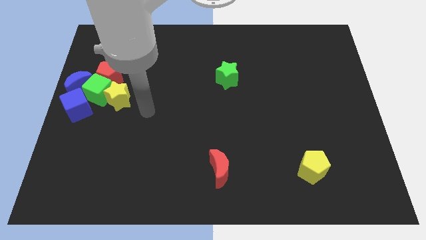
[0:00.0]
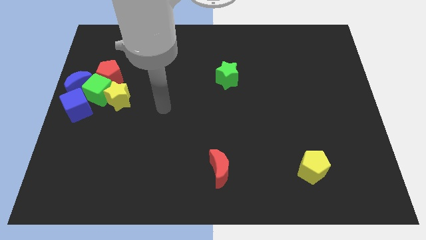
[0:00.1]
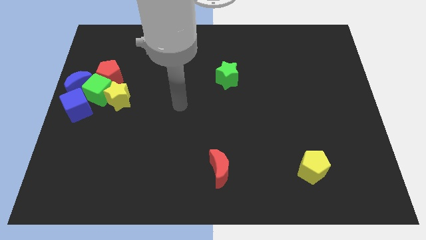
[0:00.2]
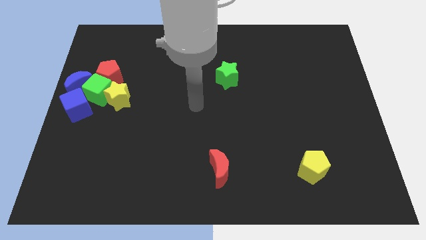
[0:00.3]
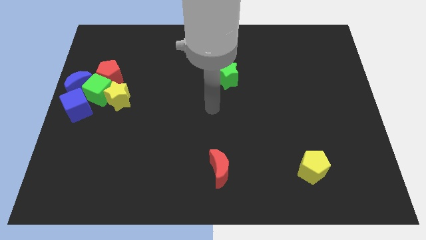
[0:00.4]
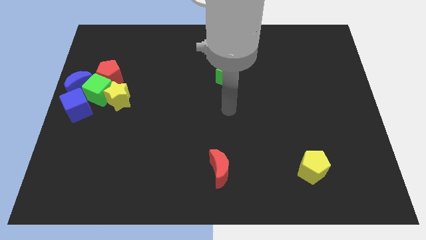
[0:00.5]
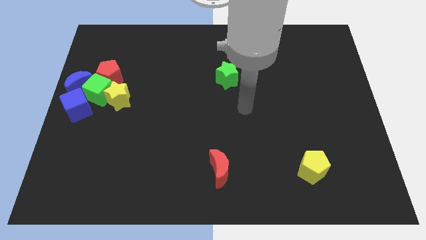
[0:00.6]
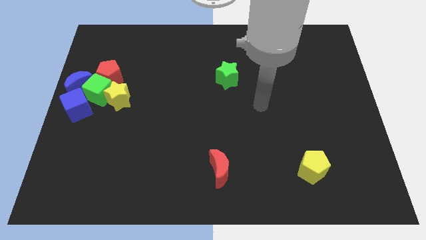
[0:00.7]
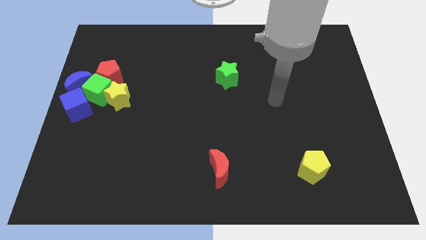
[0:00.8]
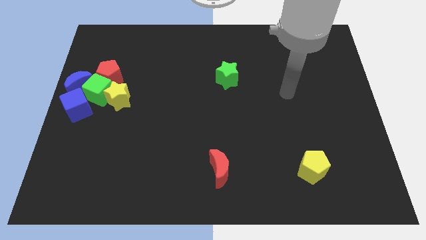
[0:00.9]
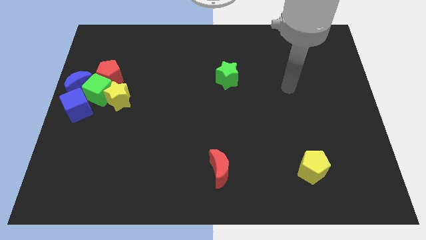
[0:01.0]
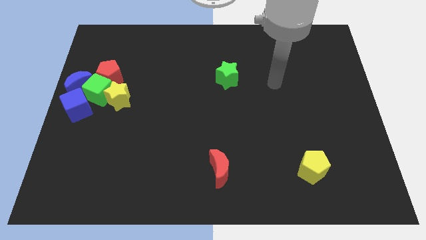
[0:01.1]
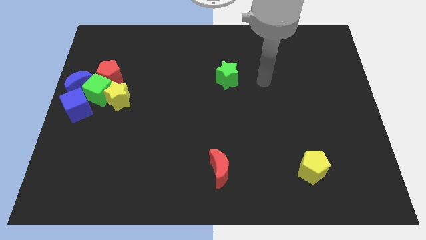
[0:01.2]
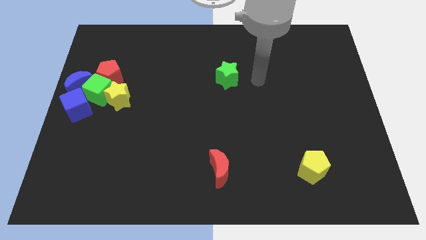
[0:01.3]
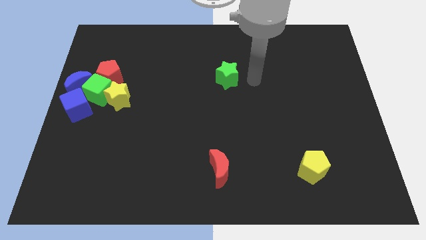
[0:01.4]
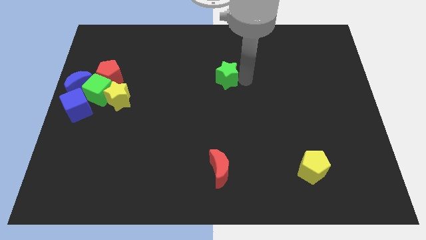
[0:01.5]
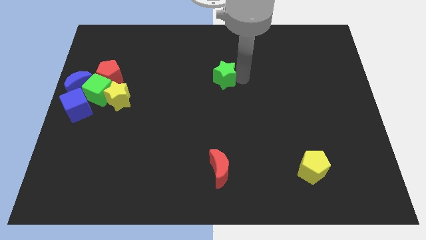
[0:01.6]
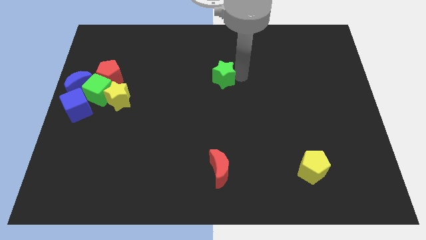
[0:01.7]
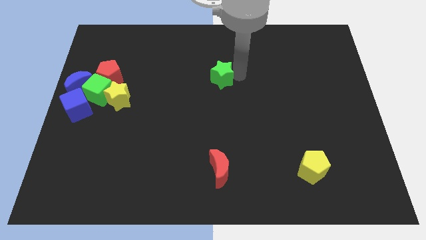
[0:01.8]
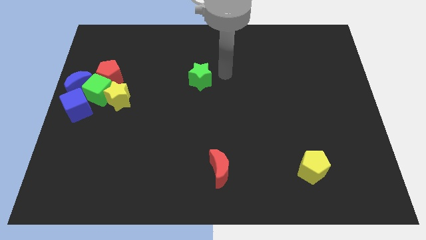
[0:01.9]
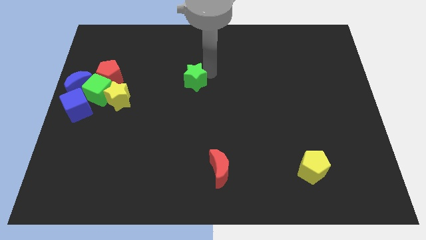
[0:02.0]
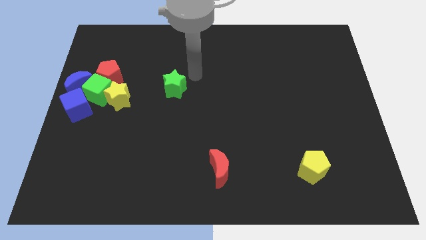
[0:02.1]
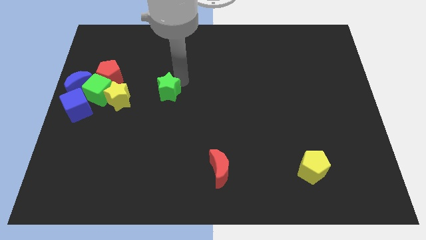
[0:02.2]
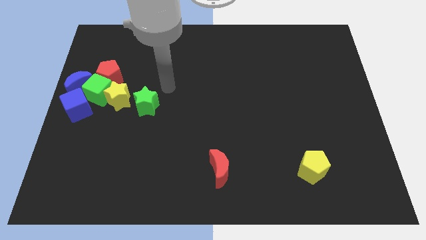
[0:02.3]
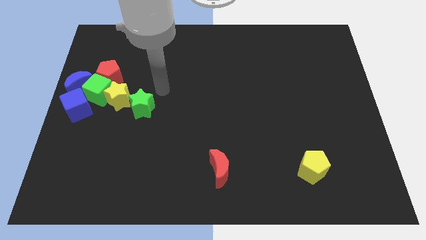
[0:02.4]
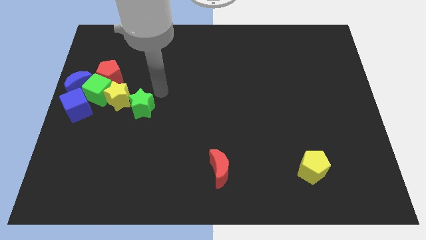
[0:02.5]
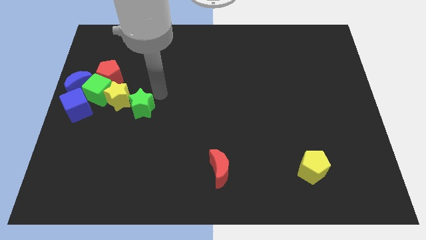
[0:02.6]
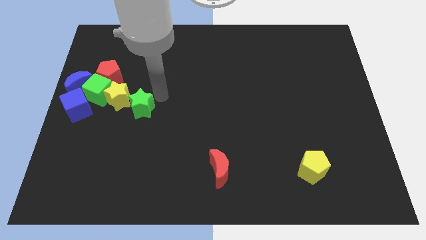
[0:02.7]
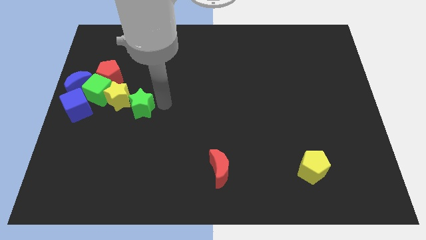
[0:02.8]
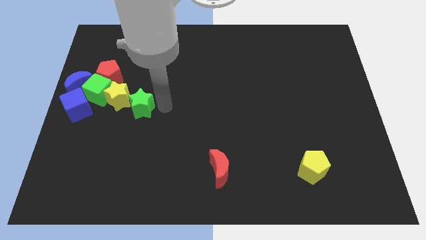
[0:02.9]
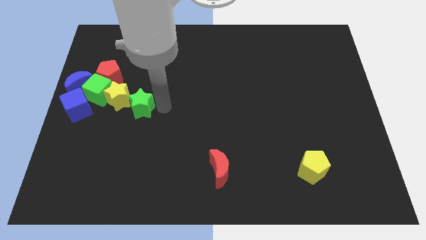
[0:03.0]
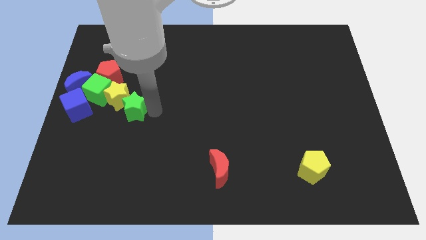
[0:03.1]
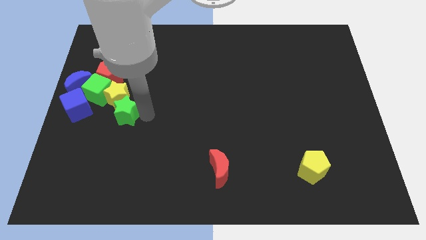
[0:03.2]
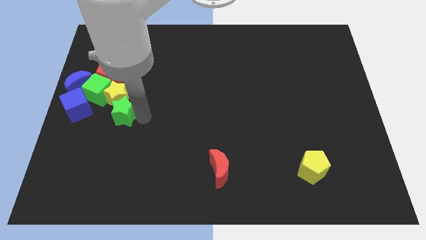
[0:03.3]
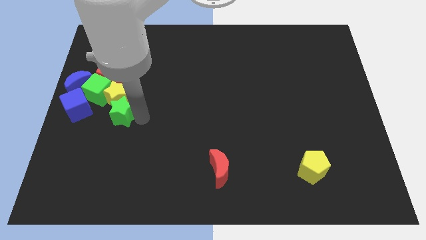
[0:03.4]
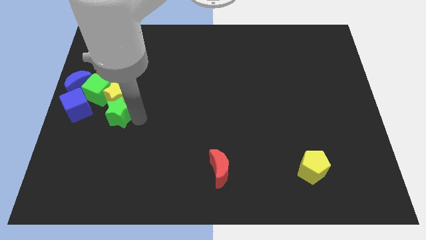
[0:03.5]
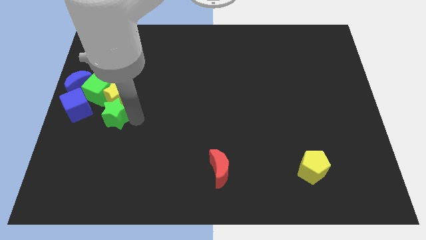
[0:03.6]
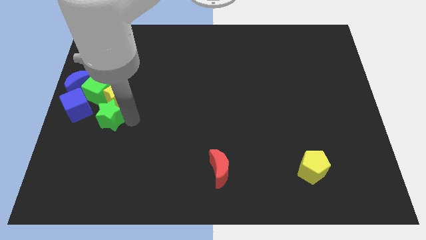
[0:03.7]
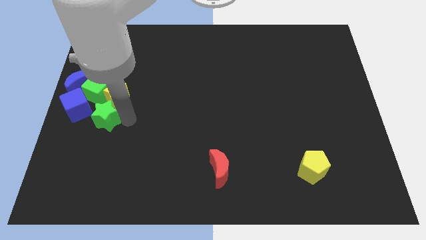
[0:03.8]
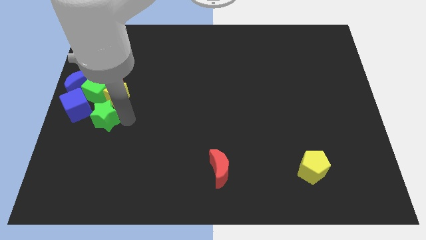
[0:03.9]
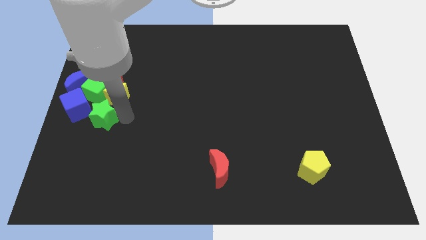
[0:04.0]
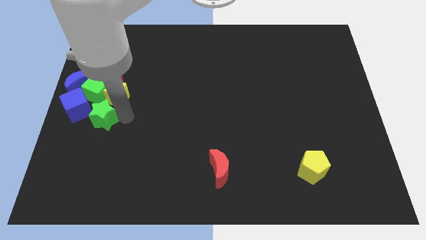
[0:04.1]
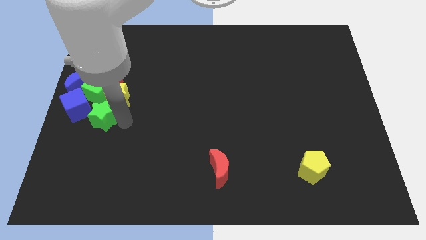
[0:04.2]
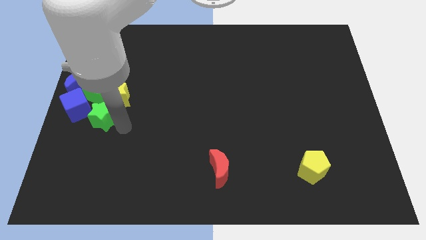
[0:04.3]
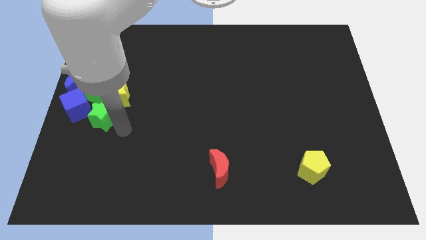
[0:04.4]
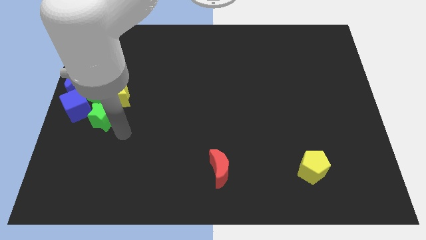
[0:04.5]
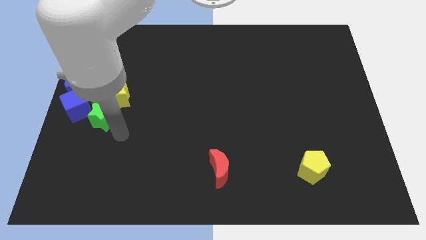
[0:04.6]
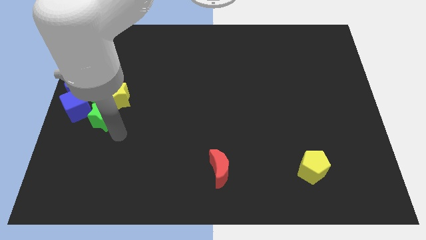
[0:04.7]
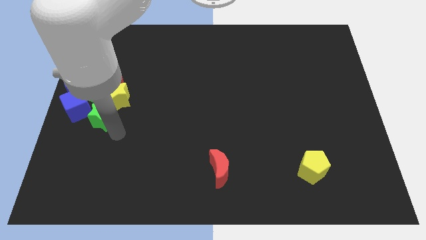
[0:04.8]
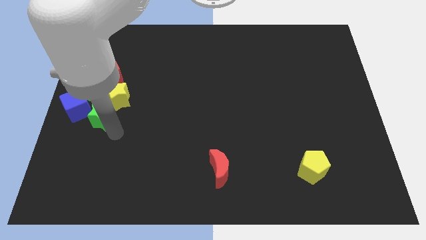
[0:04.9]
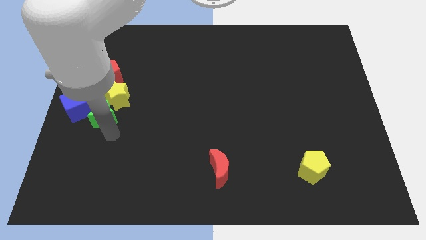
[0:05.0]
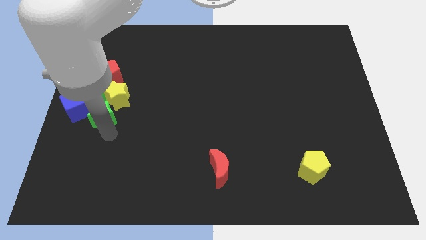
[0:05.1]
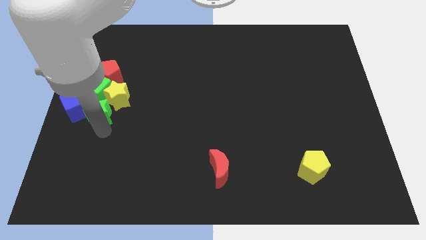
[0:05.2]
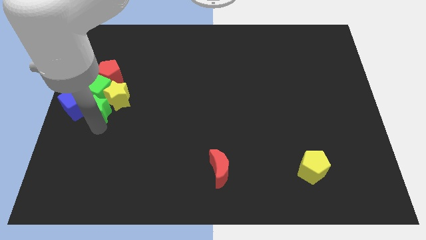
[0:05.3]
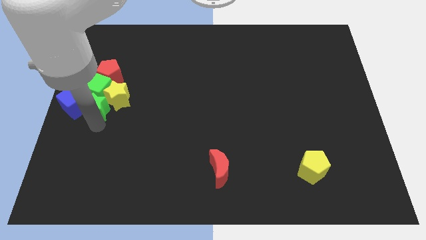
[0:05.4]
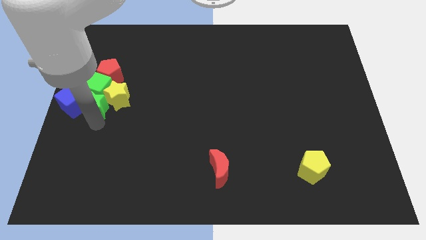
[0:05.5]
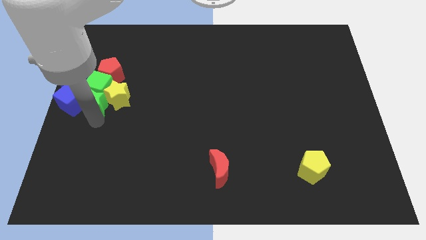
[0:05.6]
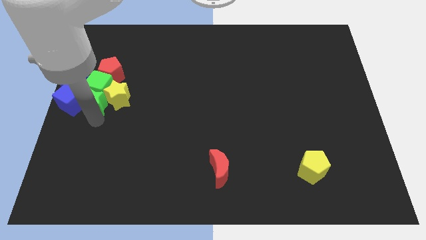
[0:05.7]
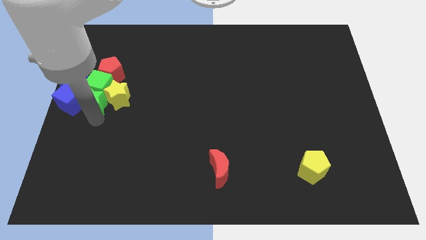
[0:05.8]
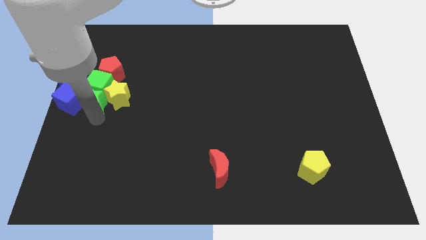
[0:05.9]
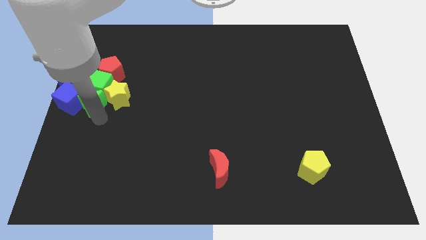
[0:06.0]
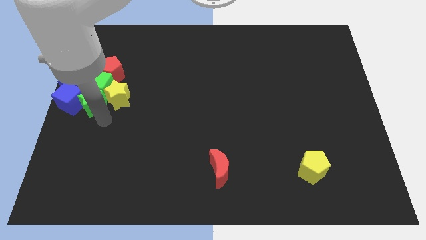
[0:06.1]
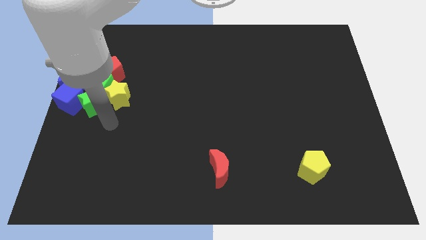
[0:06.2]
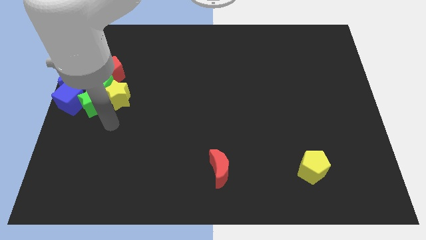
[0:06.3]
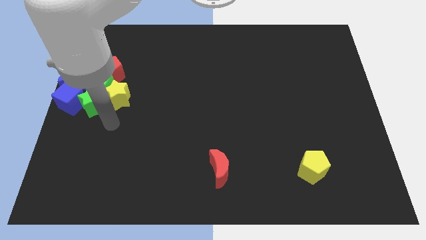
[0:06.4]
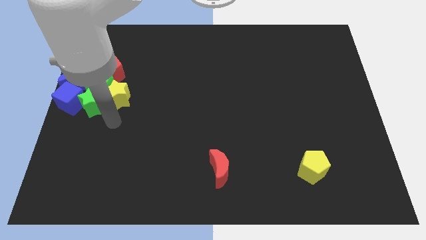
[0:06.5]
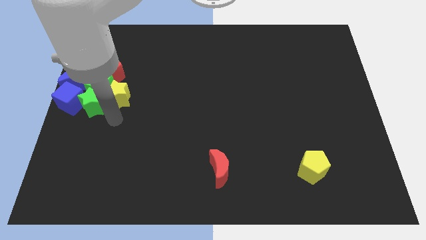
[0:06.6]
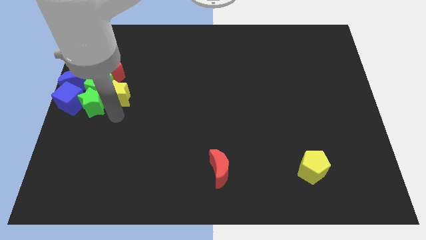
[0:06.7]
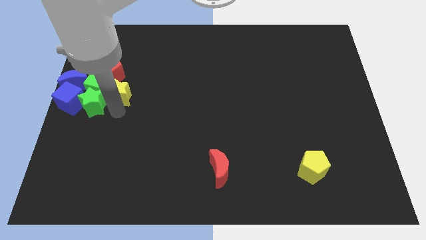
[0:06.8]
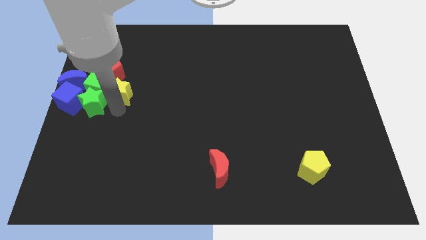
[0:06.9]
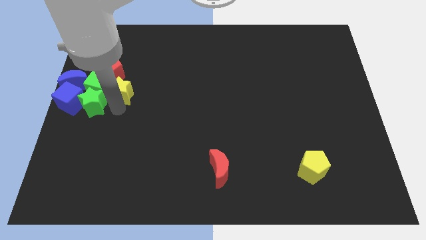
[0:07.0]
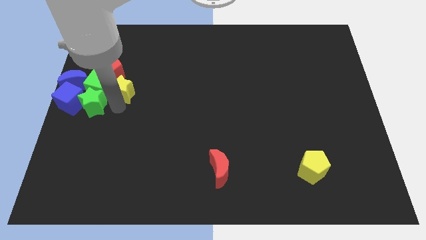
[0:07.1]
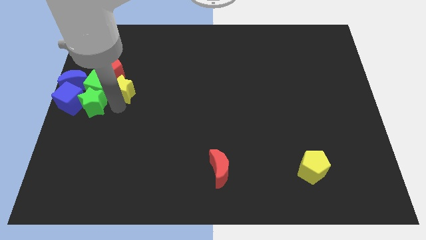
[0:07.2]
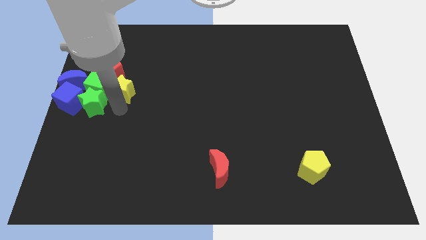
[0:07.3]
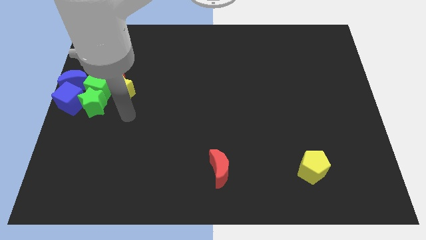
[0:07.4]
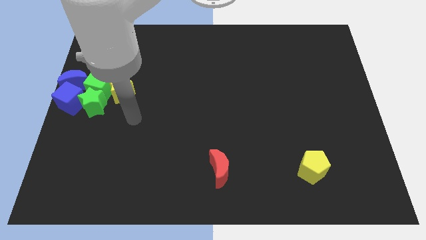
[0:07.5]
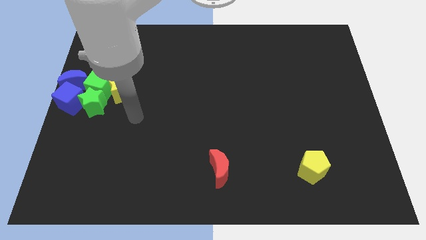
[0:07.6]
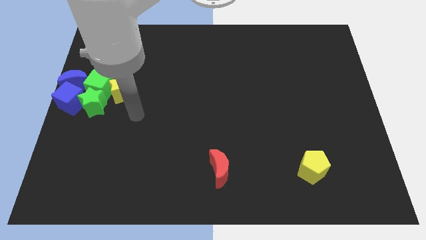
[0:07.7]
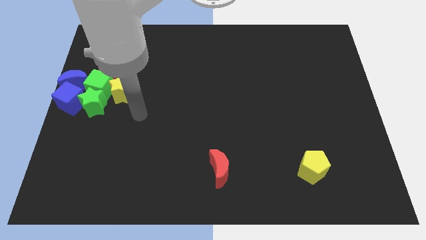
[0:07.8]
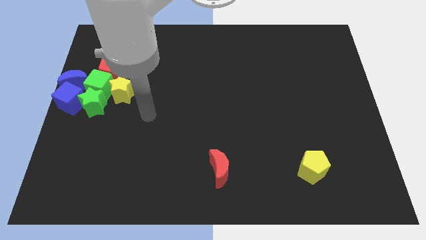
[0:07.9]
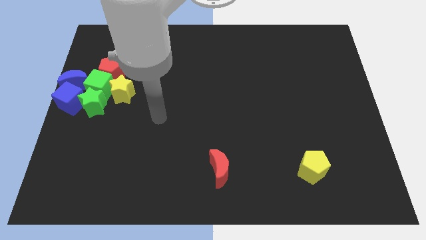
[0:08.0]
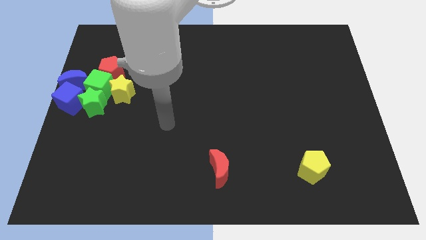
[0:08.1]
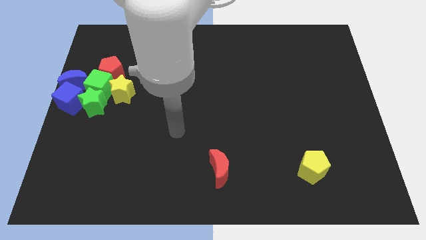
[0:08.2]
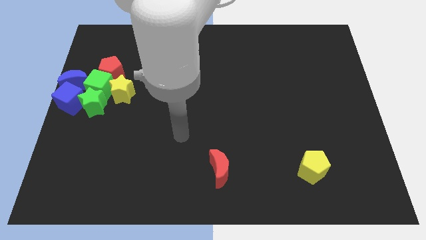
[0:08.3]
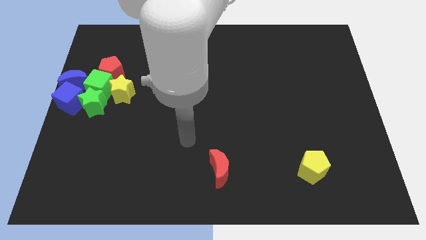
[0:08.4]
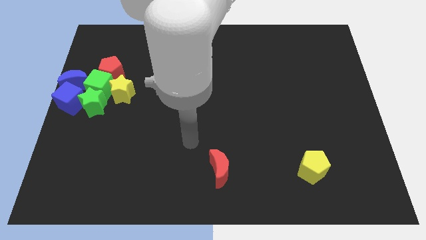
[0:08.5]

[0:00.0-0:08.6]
push the green star to the left of the board

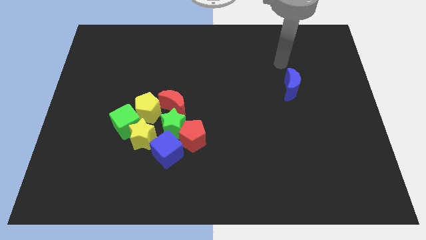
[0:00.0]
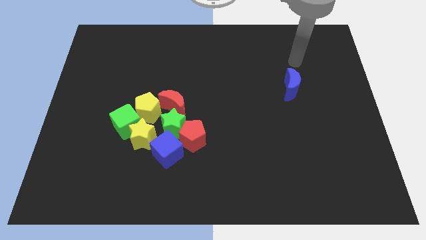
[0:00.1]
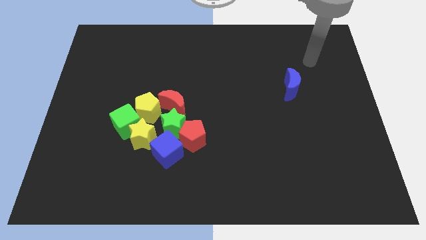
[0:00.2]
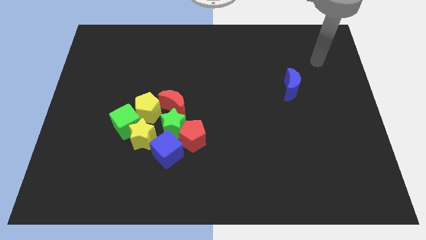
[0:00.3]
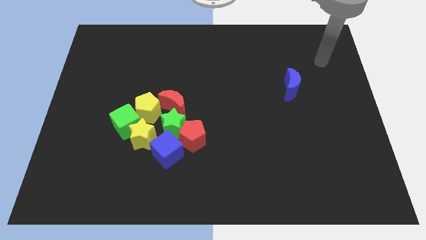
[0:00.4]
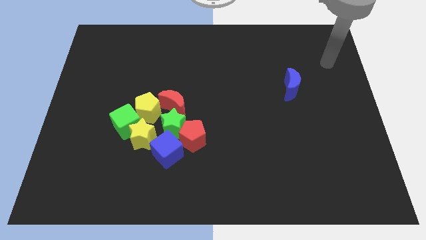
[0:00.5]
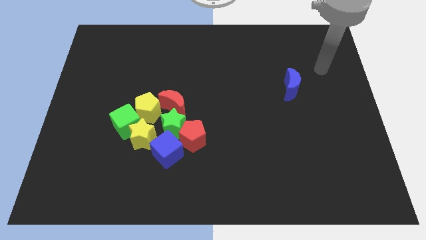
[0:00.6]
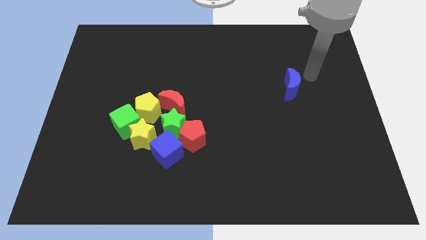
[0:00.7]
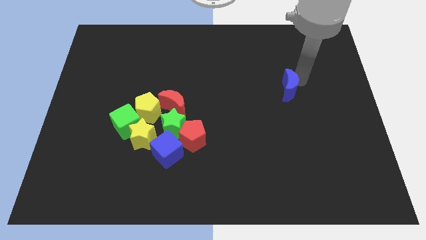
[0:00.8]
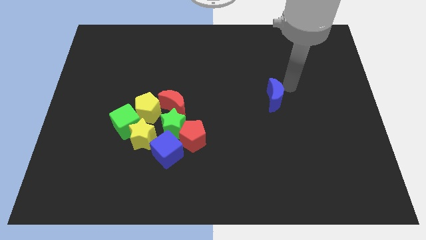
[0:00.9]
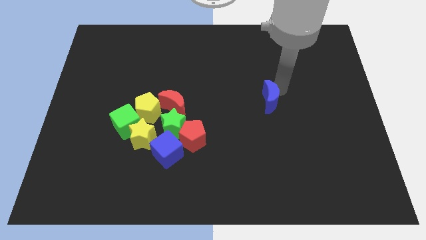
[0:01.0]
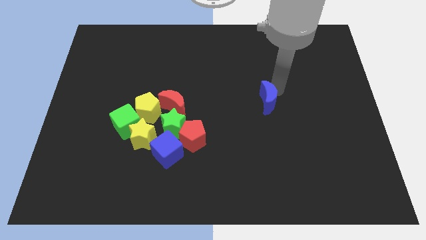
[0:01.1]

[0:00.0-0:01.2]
drag the blue moon to the center
